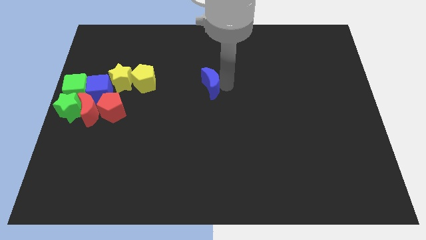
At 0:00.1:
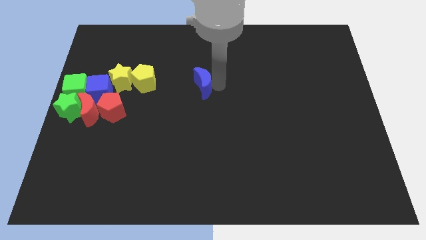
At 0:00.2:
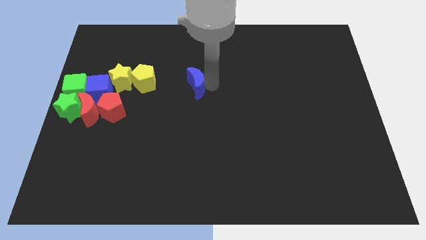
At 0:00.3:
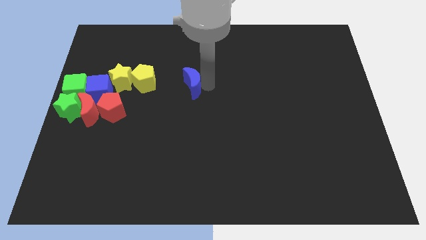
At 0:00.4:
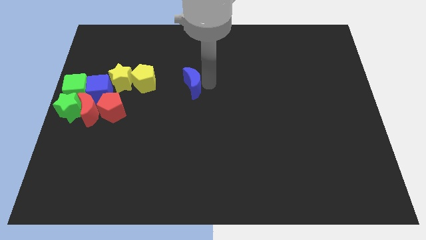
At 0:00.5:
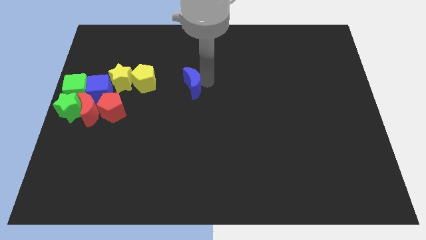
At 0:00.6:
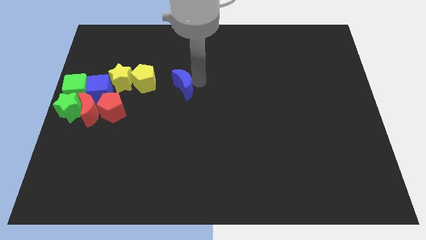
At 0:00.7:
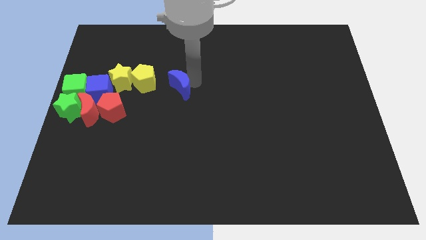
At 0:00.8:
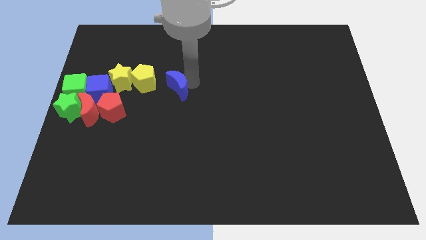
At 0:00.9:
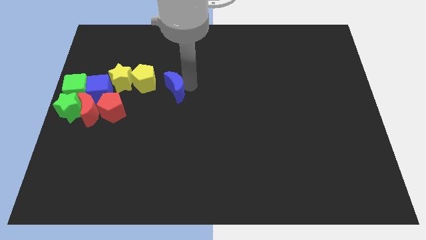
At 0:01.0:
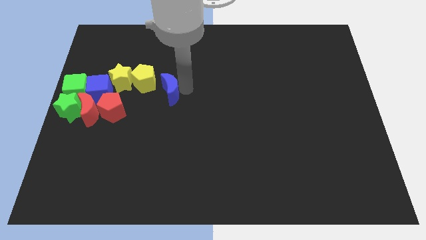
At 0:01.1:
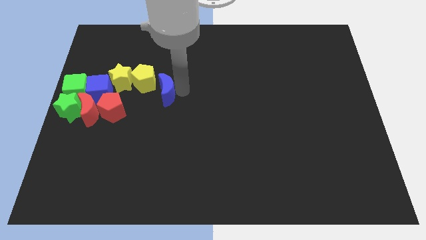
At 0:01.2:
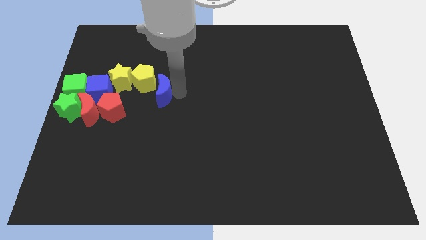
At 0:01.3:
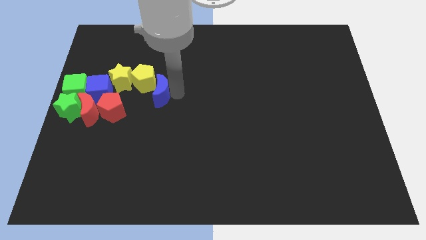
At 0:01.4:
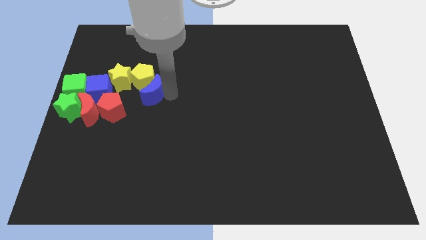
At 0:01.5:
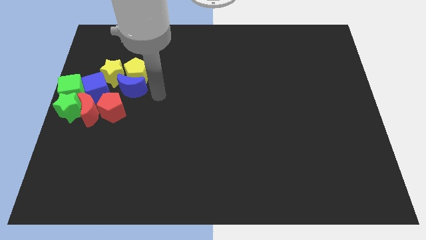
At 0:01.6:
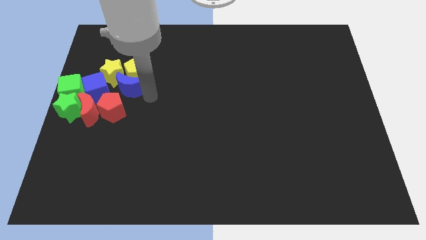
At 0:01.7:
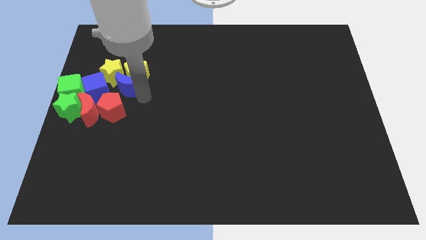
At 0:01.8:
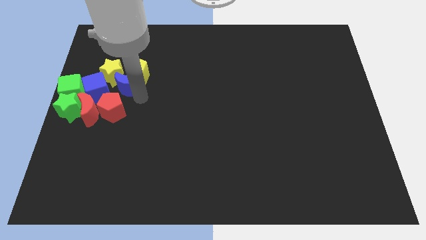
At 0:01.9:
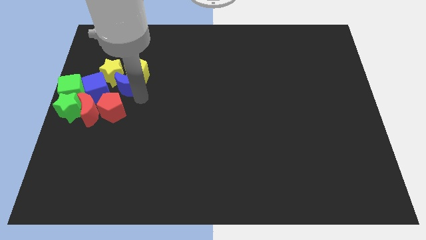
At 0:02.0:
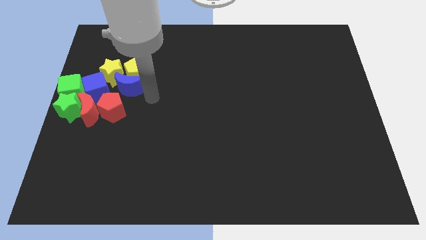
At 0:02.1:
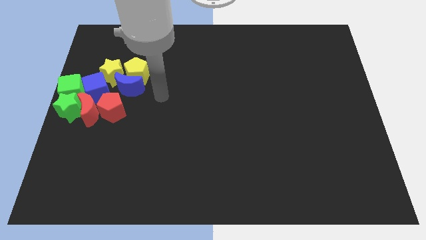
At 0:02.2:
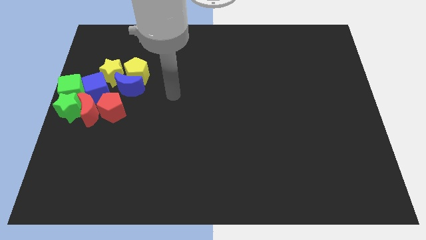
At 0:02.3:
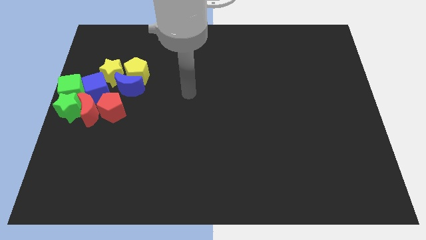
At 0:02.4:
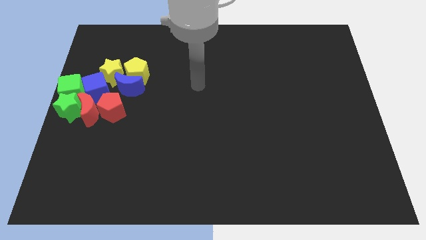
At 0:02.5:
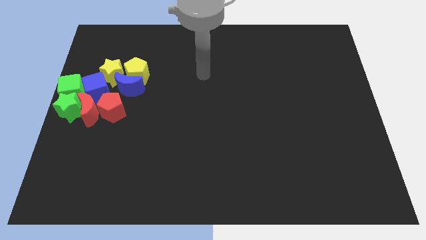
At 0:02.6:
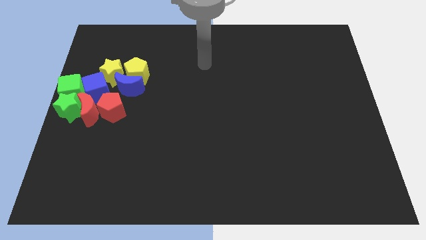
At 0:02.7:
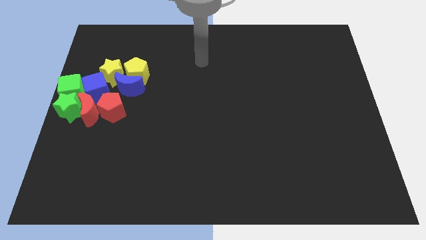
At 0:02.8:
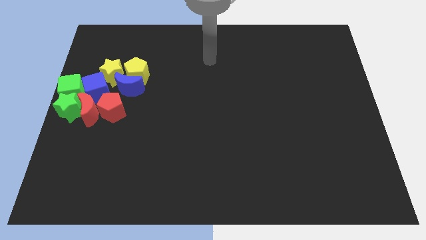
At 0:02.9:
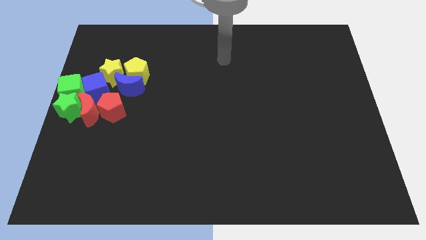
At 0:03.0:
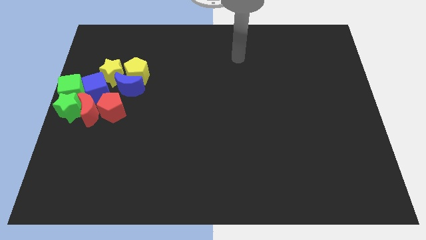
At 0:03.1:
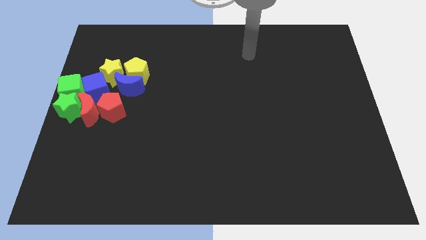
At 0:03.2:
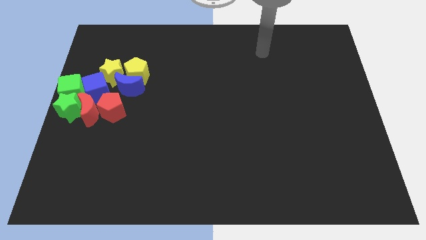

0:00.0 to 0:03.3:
push the blue crescent to the bottom of the yellow pentagon

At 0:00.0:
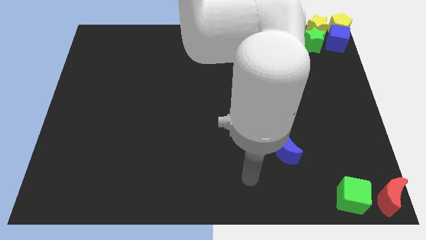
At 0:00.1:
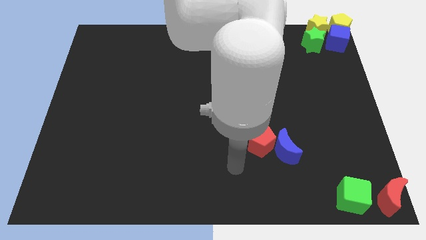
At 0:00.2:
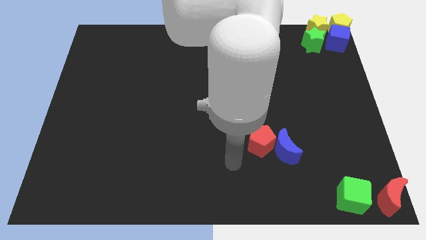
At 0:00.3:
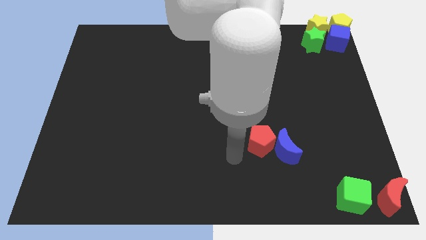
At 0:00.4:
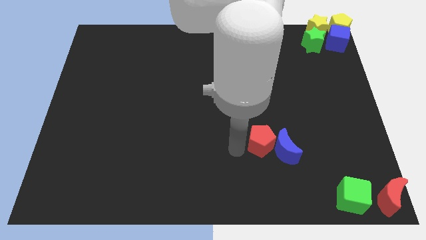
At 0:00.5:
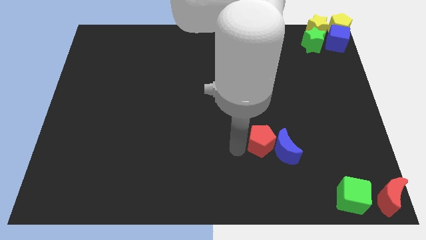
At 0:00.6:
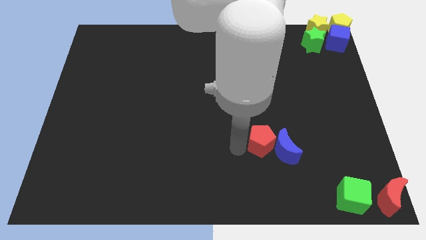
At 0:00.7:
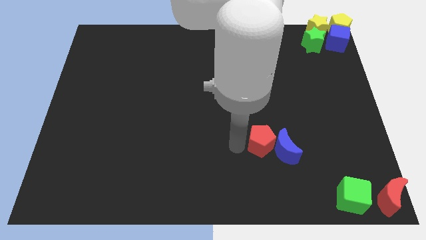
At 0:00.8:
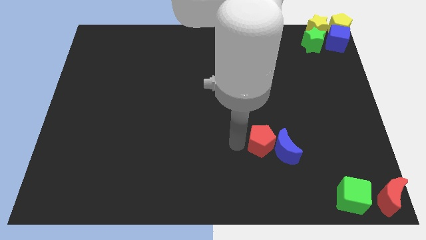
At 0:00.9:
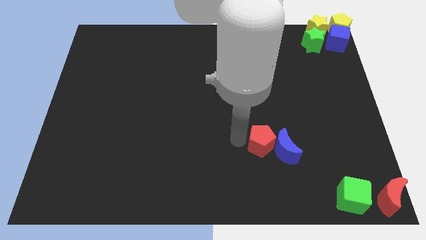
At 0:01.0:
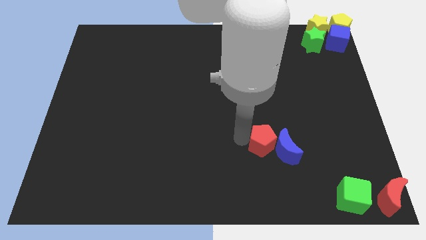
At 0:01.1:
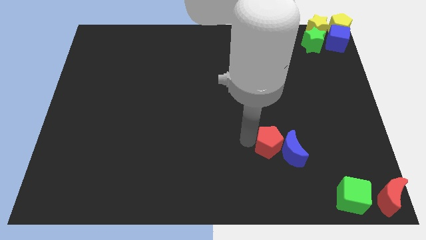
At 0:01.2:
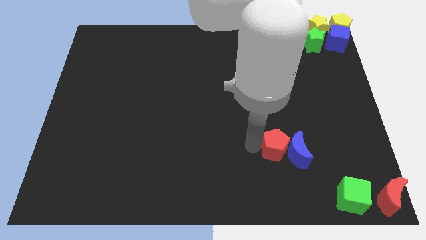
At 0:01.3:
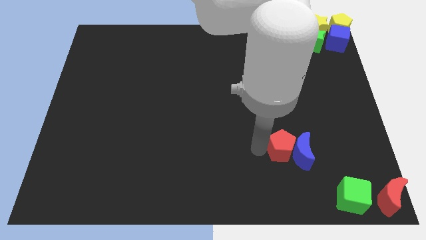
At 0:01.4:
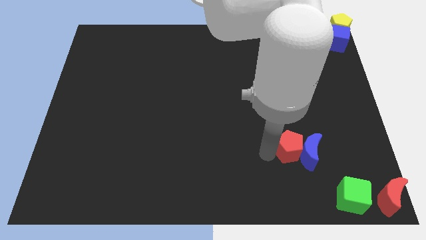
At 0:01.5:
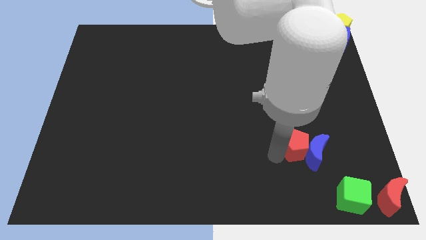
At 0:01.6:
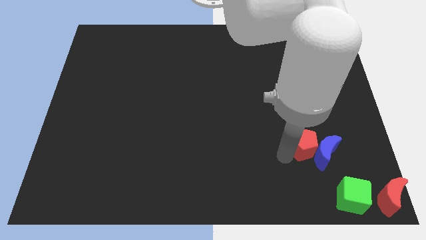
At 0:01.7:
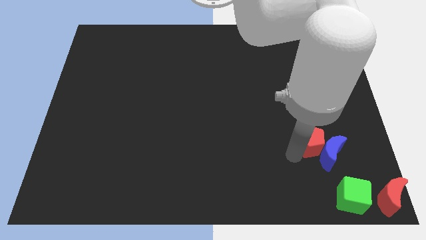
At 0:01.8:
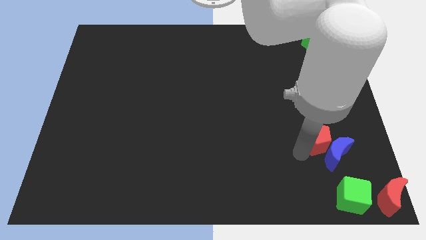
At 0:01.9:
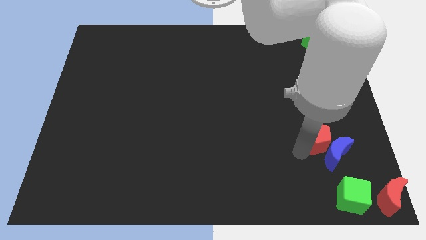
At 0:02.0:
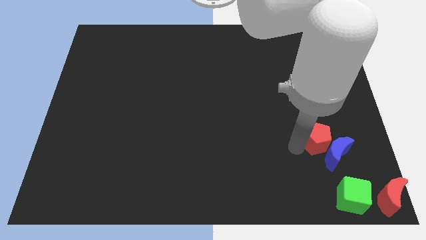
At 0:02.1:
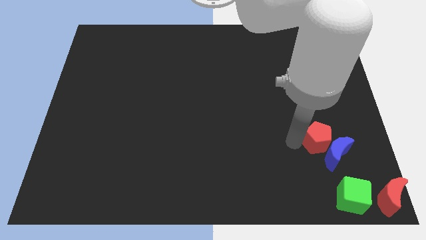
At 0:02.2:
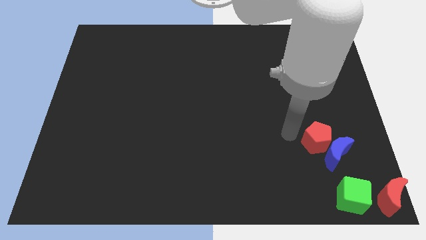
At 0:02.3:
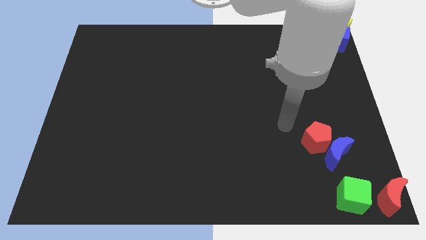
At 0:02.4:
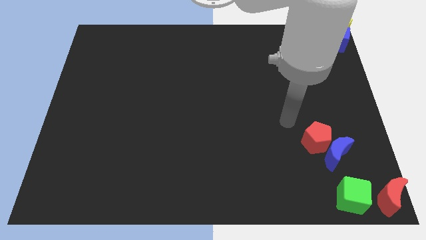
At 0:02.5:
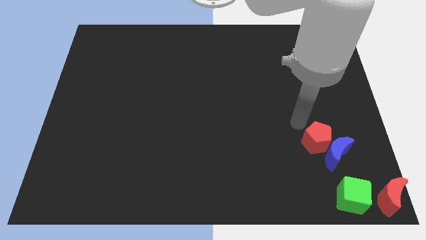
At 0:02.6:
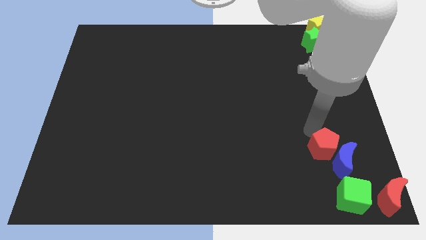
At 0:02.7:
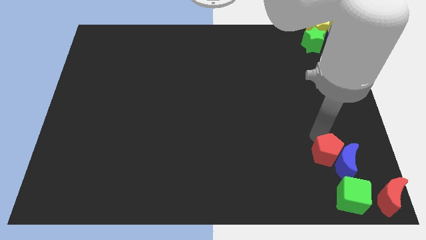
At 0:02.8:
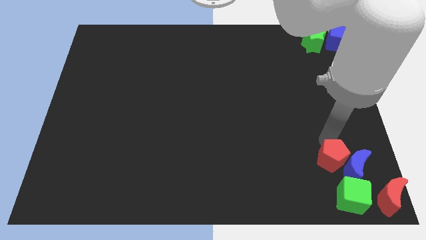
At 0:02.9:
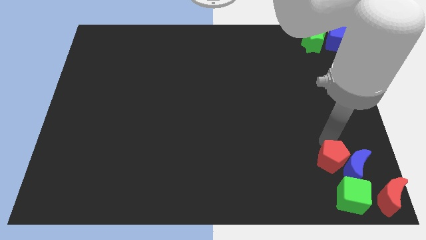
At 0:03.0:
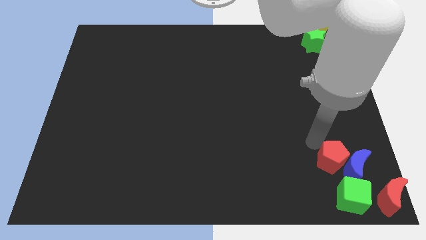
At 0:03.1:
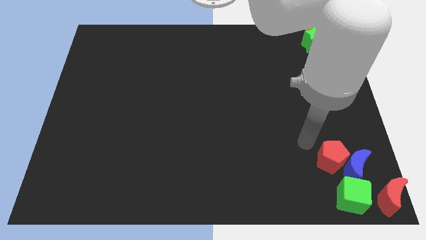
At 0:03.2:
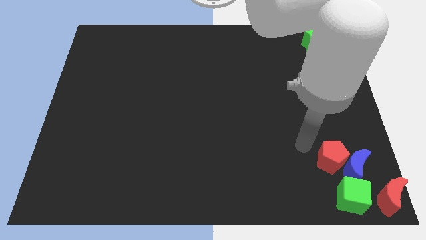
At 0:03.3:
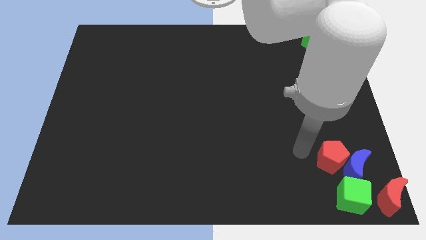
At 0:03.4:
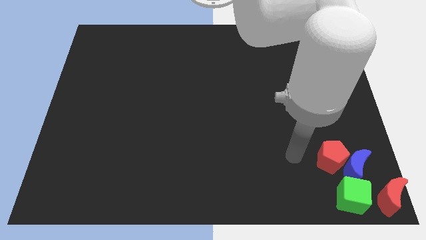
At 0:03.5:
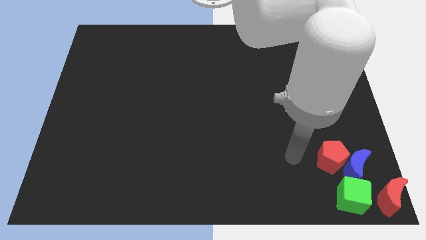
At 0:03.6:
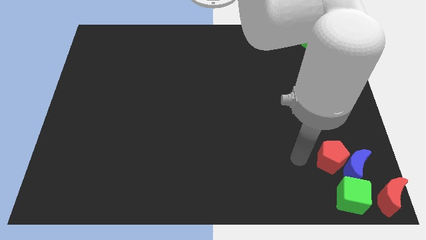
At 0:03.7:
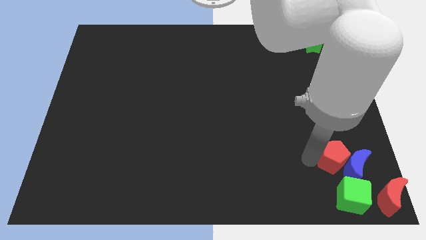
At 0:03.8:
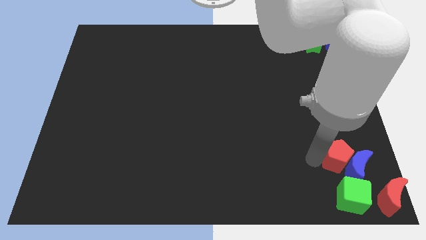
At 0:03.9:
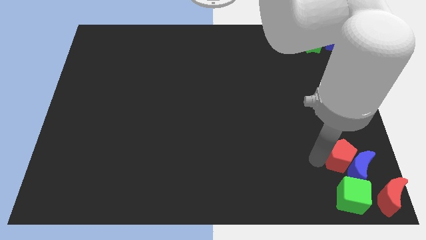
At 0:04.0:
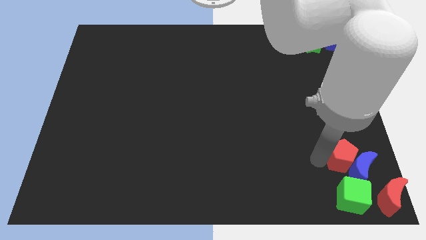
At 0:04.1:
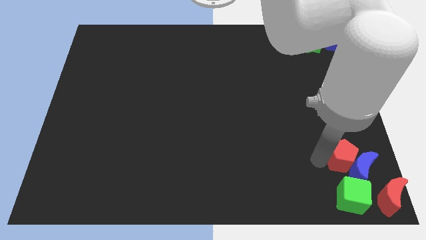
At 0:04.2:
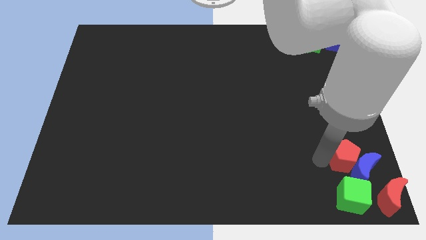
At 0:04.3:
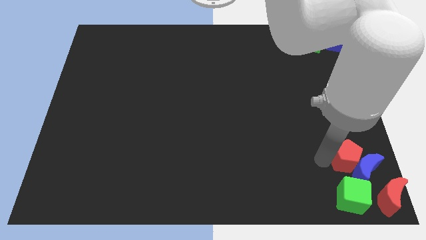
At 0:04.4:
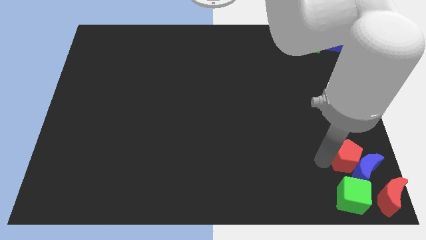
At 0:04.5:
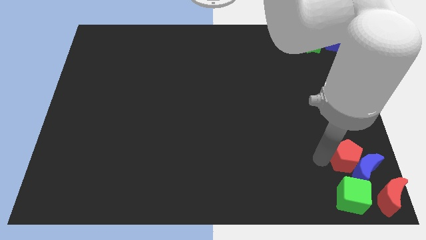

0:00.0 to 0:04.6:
push the blue moon with red pentagon towards bottom right of the board

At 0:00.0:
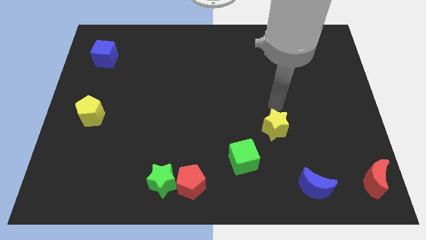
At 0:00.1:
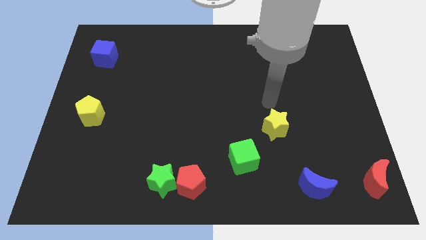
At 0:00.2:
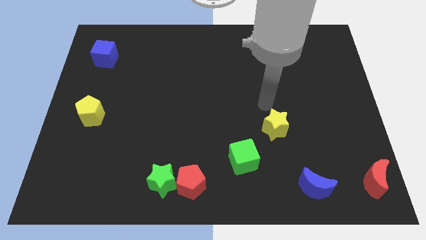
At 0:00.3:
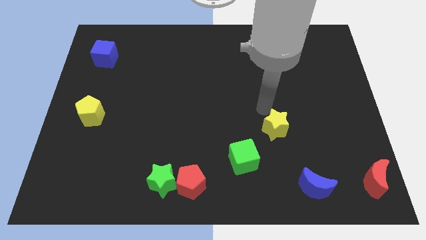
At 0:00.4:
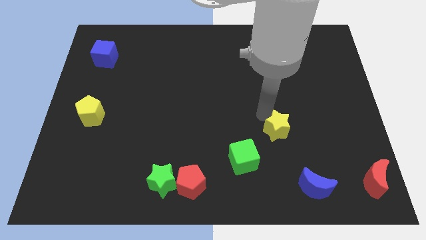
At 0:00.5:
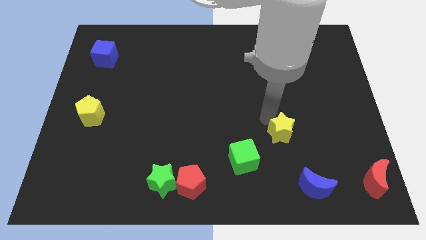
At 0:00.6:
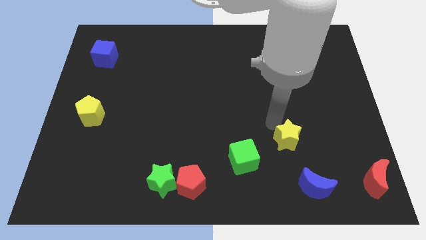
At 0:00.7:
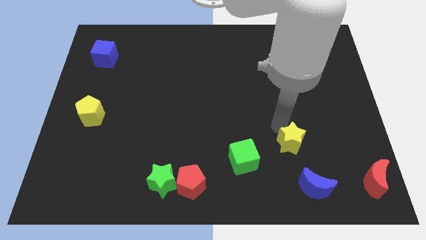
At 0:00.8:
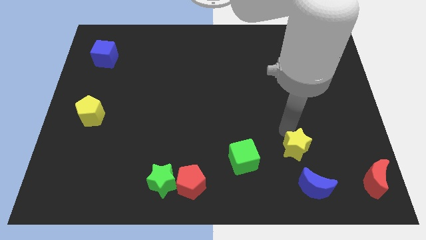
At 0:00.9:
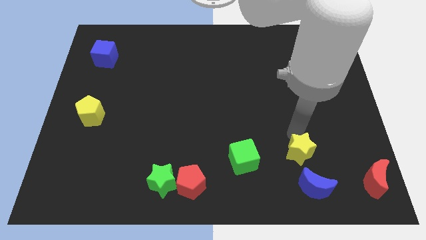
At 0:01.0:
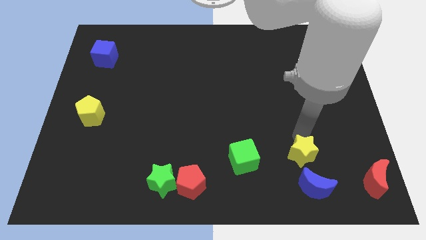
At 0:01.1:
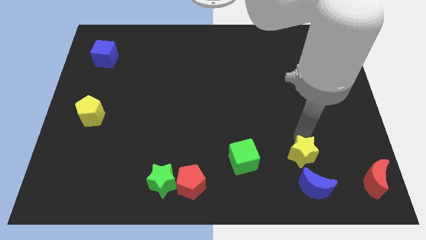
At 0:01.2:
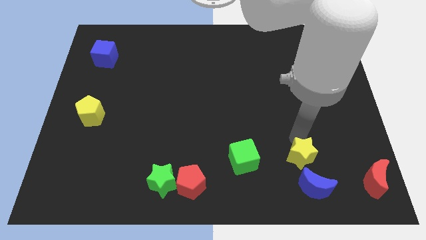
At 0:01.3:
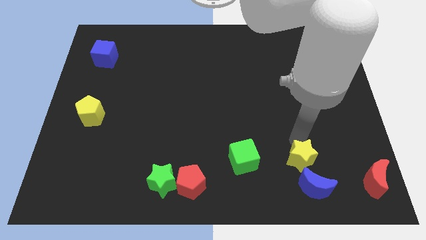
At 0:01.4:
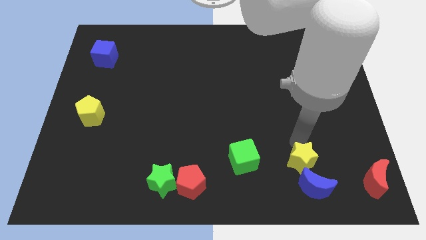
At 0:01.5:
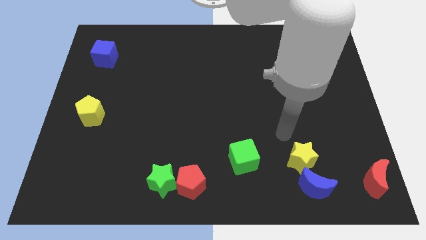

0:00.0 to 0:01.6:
push the yellow star diagonally above the blue moon
